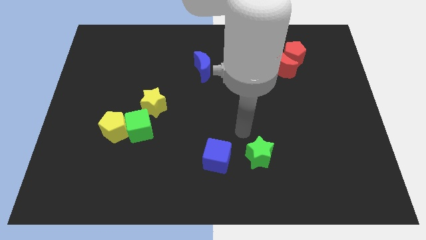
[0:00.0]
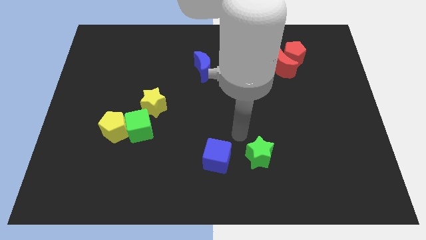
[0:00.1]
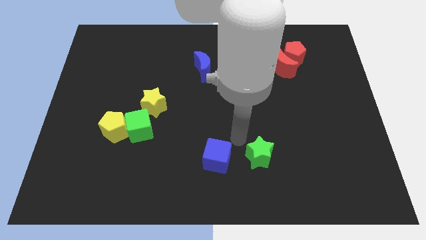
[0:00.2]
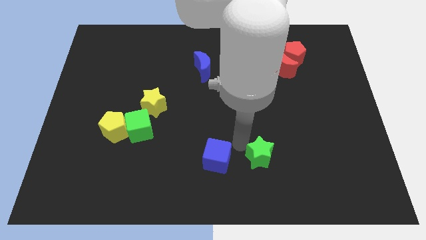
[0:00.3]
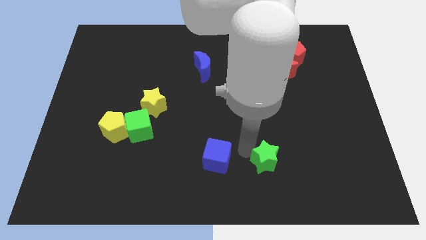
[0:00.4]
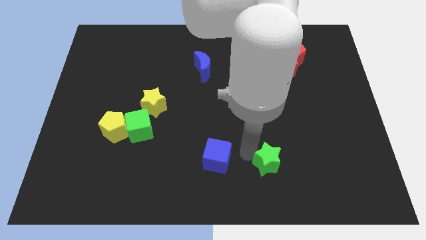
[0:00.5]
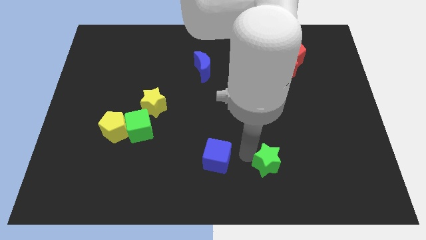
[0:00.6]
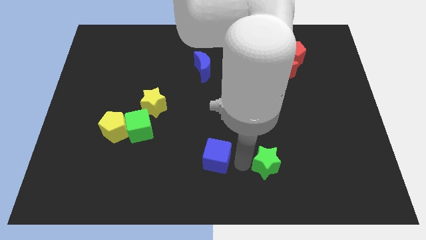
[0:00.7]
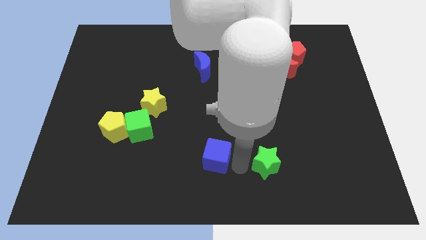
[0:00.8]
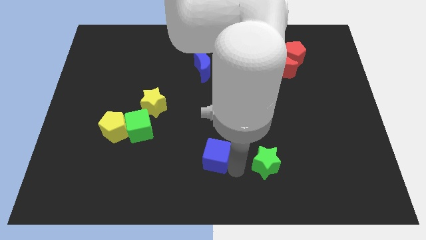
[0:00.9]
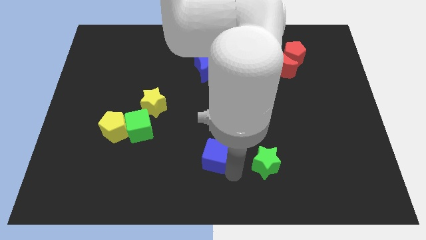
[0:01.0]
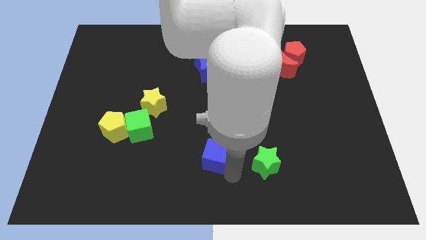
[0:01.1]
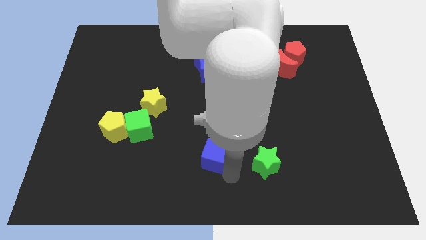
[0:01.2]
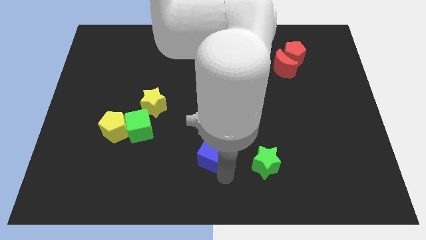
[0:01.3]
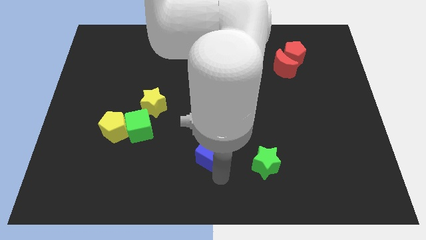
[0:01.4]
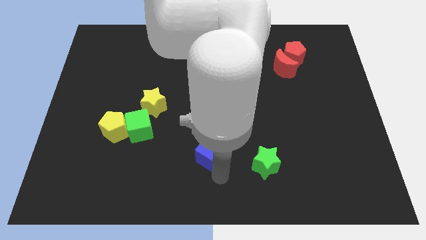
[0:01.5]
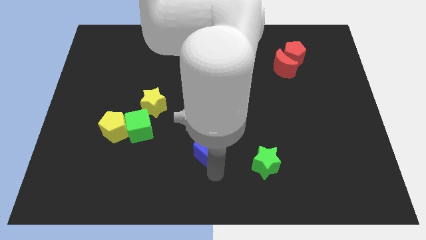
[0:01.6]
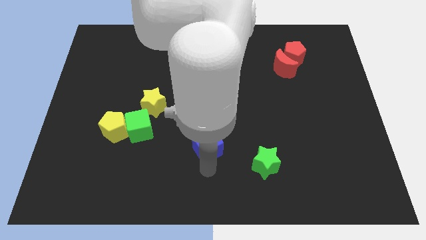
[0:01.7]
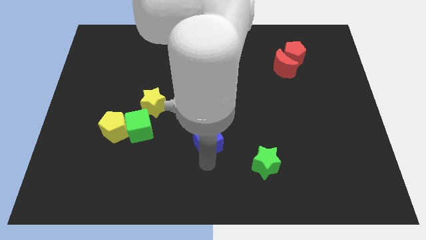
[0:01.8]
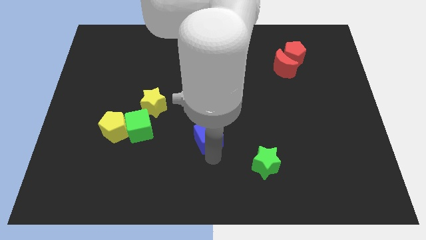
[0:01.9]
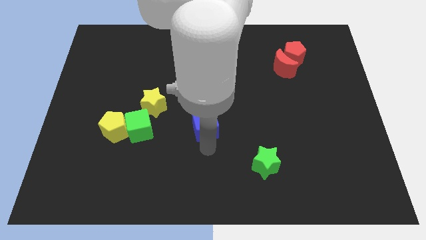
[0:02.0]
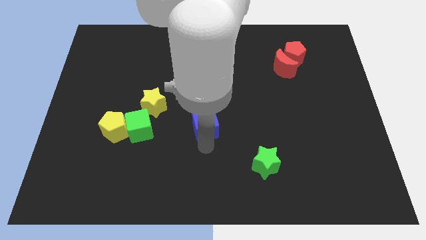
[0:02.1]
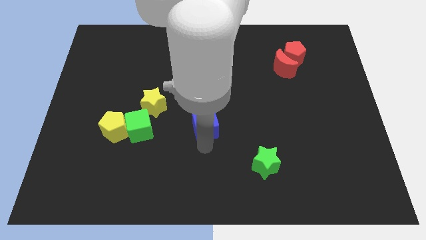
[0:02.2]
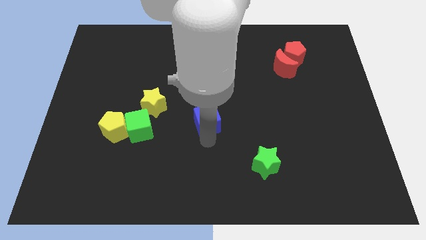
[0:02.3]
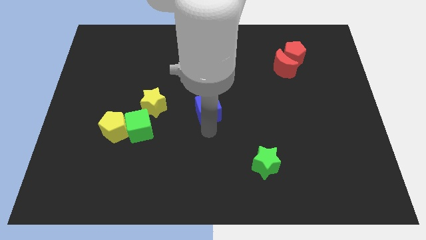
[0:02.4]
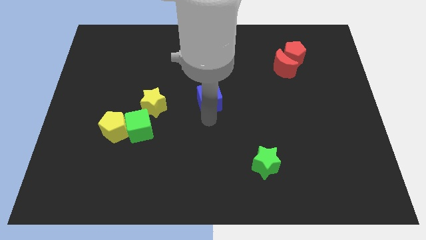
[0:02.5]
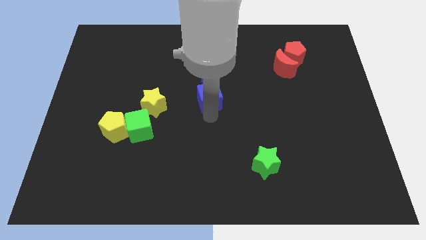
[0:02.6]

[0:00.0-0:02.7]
place the blue cube in between the green cube and red crescent

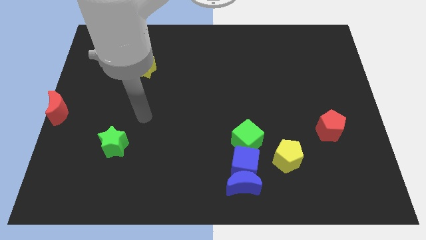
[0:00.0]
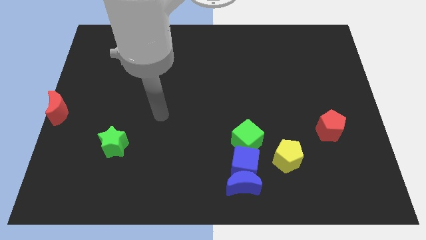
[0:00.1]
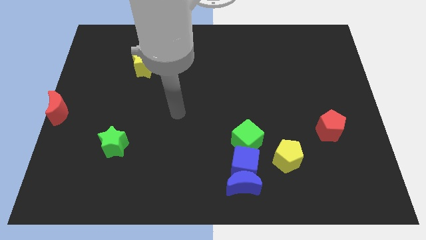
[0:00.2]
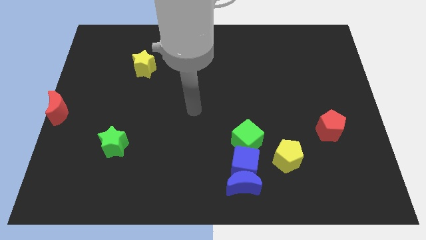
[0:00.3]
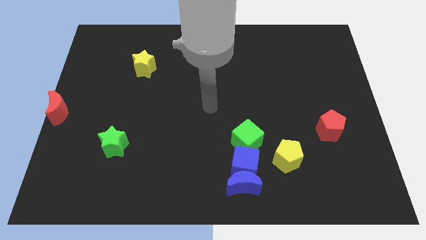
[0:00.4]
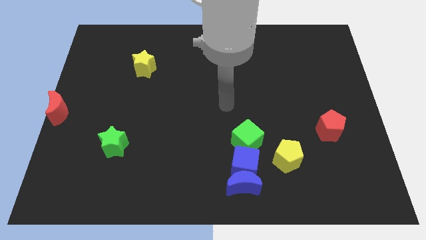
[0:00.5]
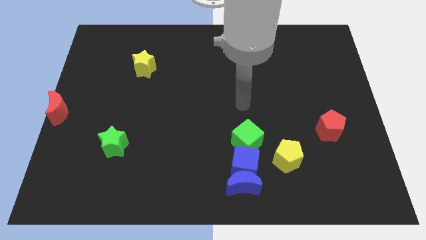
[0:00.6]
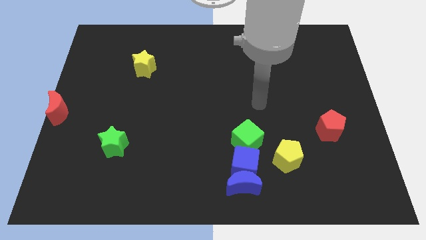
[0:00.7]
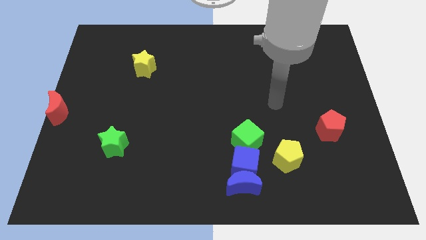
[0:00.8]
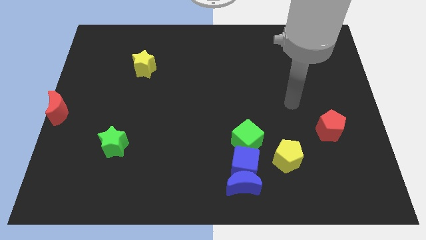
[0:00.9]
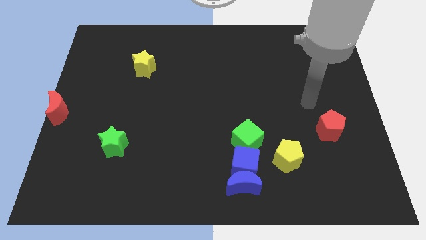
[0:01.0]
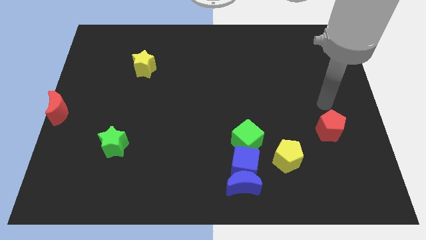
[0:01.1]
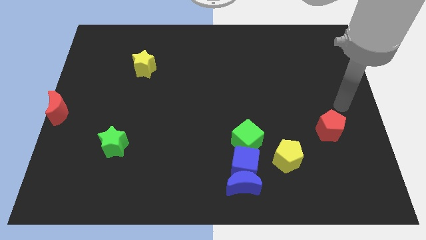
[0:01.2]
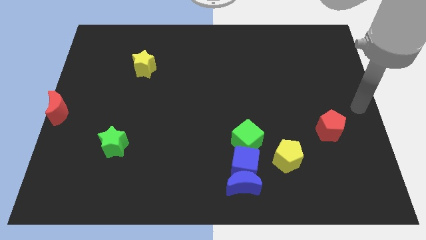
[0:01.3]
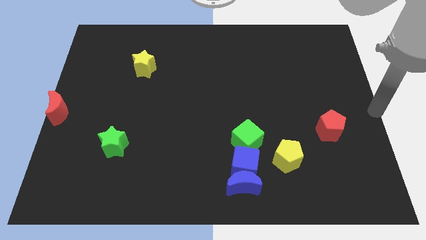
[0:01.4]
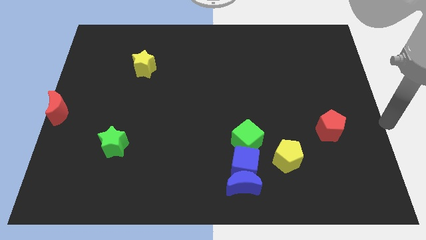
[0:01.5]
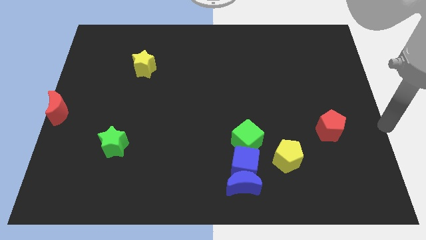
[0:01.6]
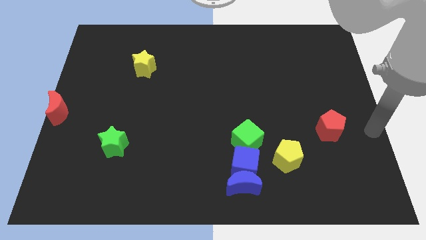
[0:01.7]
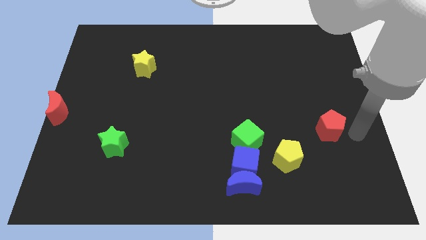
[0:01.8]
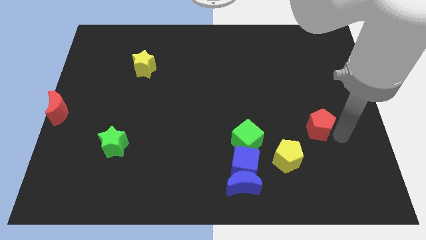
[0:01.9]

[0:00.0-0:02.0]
slide the red pentagon towards the left

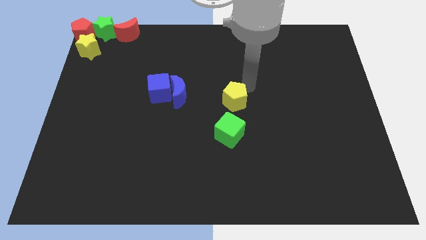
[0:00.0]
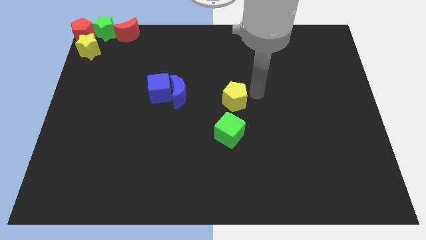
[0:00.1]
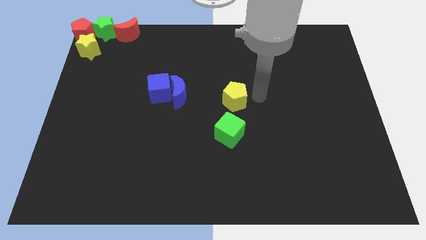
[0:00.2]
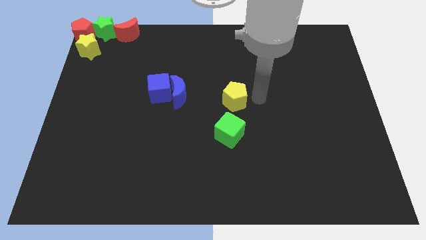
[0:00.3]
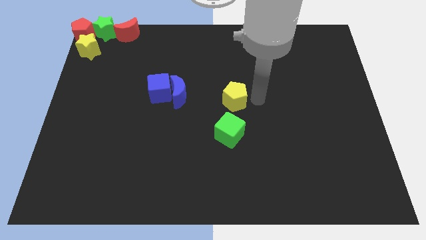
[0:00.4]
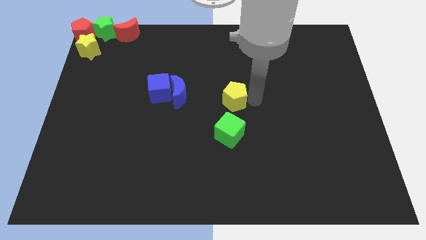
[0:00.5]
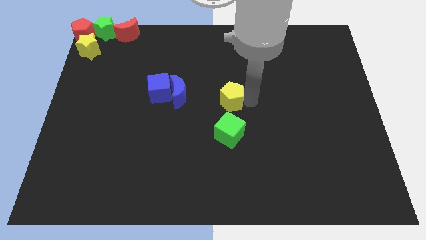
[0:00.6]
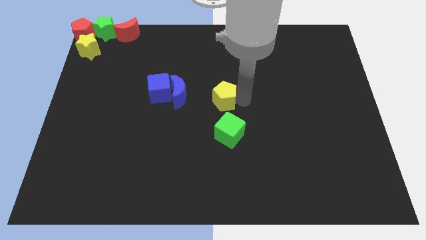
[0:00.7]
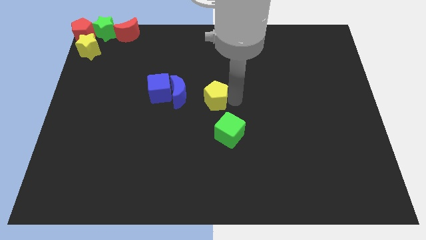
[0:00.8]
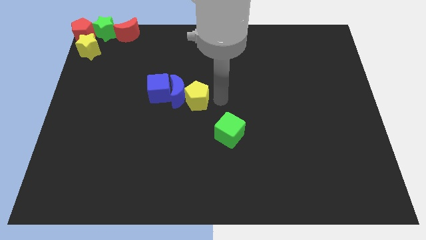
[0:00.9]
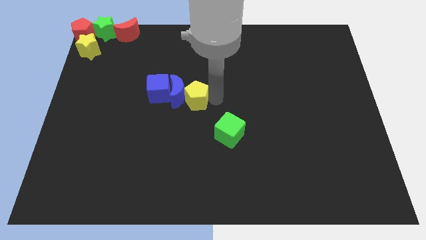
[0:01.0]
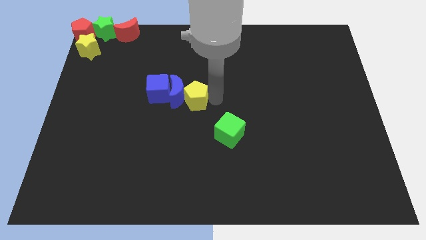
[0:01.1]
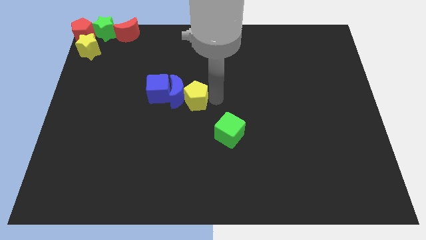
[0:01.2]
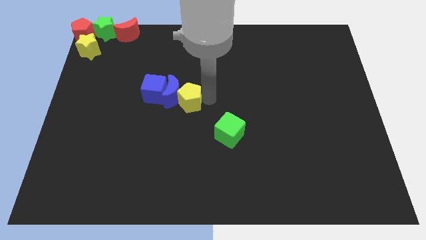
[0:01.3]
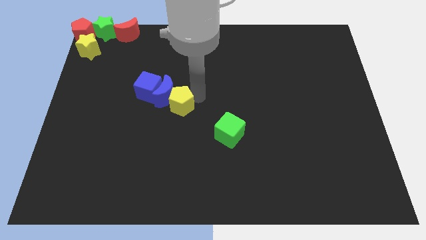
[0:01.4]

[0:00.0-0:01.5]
push the yellow pentagon into the blue moon

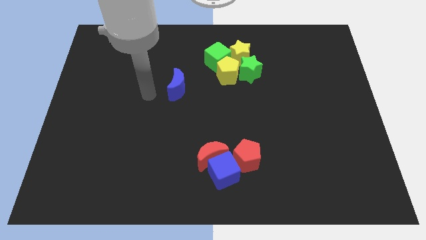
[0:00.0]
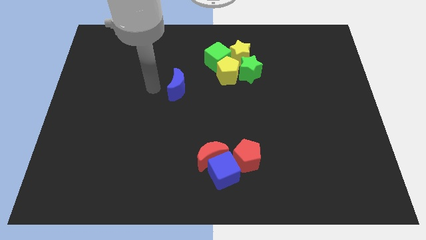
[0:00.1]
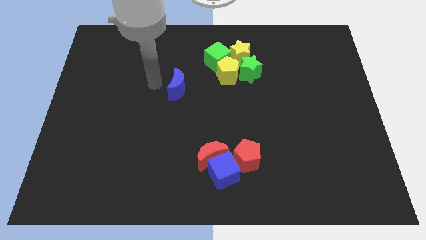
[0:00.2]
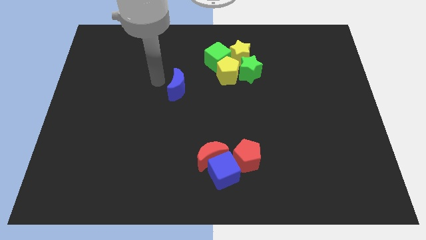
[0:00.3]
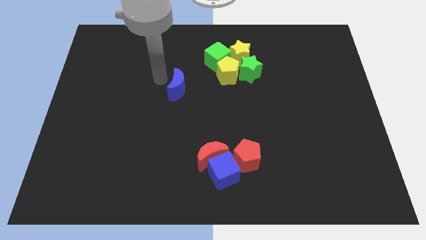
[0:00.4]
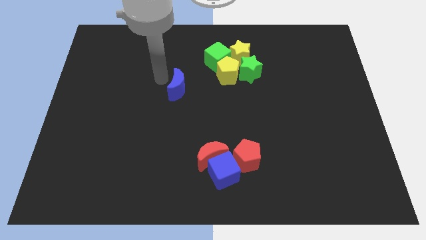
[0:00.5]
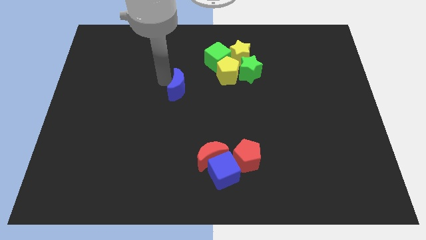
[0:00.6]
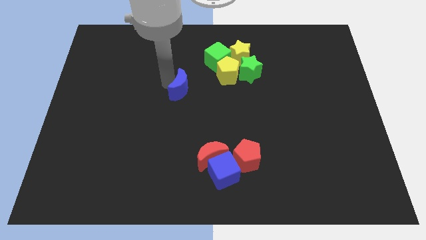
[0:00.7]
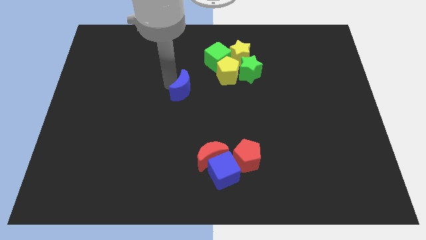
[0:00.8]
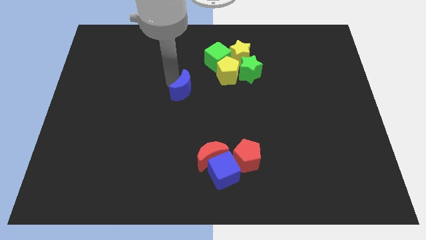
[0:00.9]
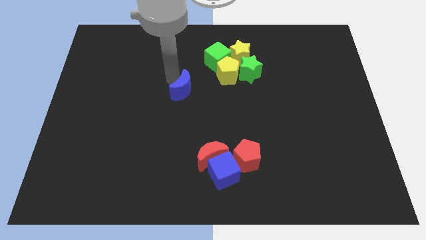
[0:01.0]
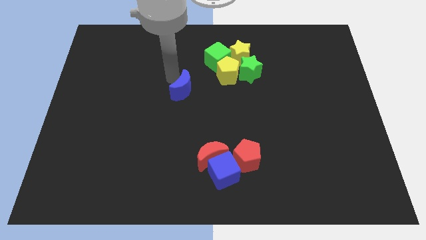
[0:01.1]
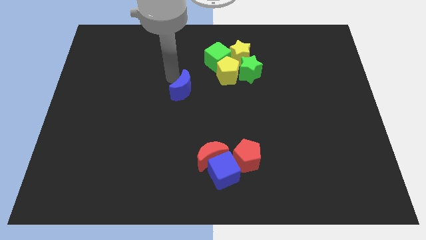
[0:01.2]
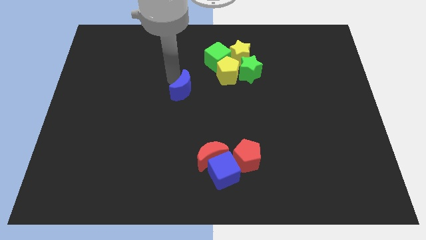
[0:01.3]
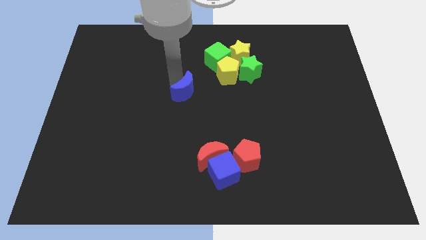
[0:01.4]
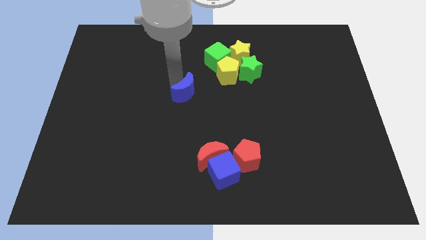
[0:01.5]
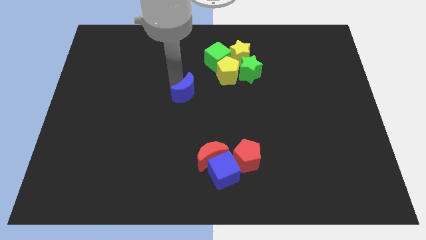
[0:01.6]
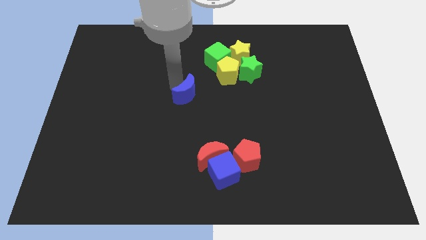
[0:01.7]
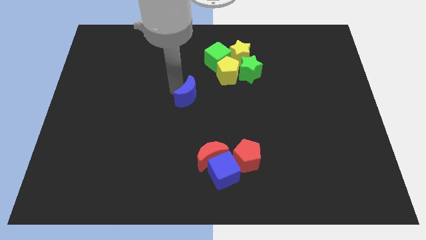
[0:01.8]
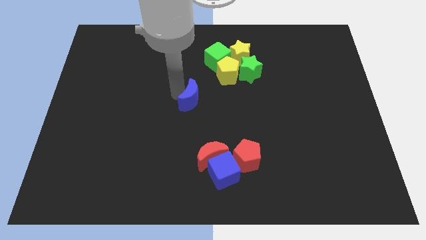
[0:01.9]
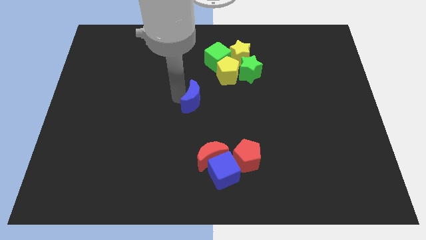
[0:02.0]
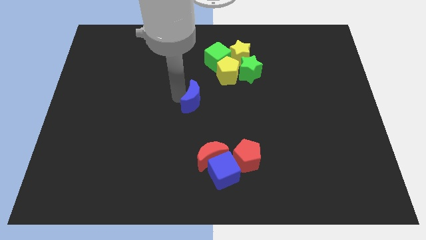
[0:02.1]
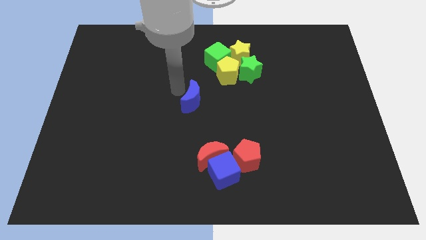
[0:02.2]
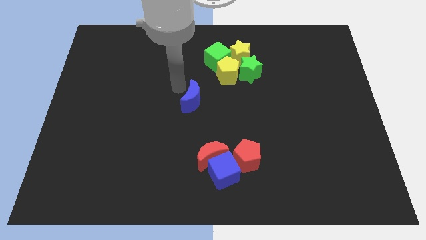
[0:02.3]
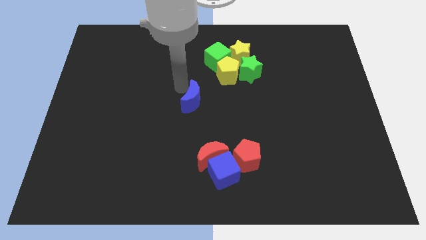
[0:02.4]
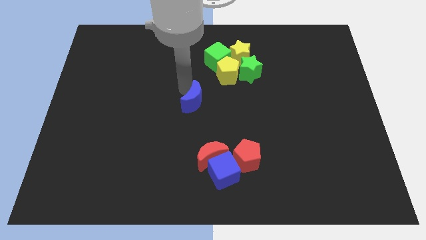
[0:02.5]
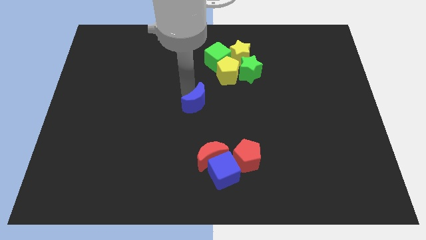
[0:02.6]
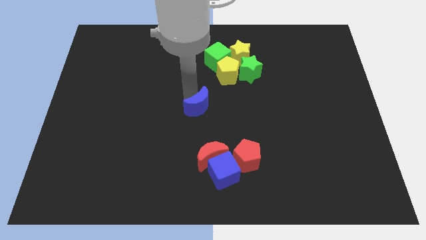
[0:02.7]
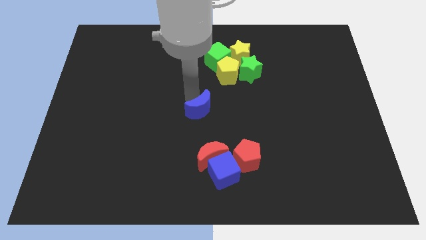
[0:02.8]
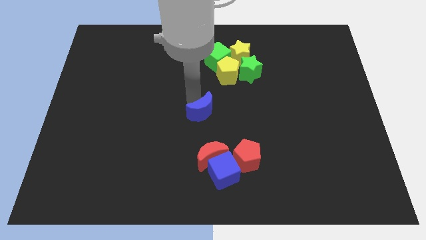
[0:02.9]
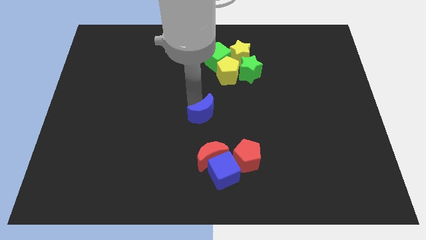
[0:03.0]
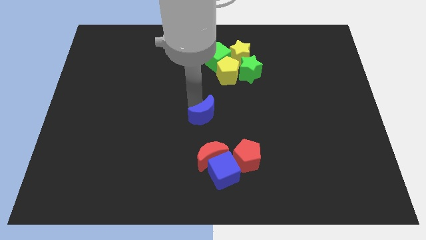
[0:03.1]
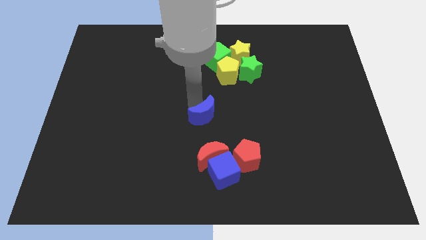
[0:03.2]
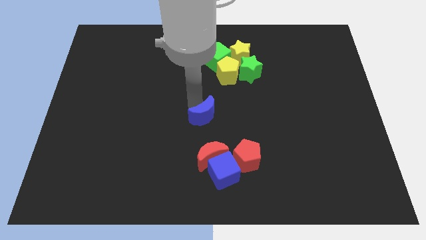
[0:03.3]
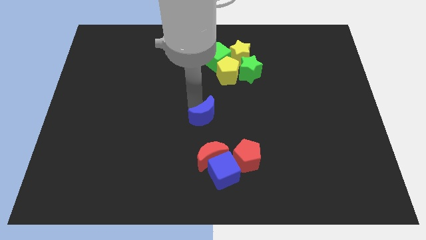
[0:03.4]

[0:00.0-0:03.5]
place the blue moon to the center of the board
